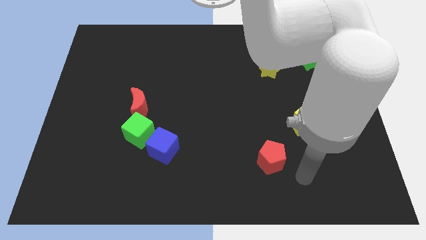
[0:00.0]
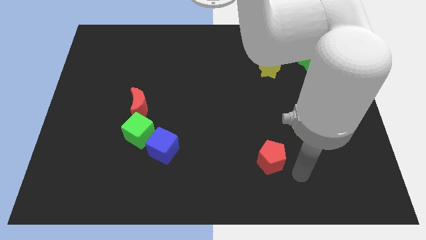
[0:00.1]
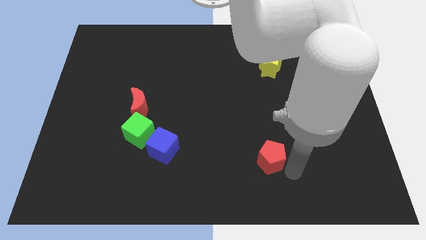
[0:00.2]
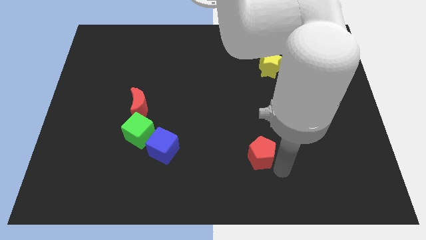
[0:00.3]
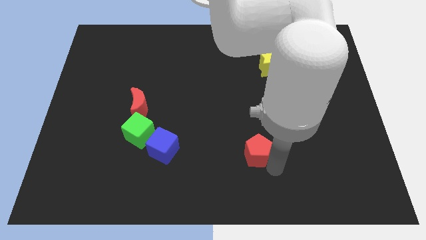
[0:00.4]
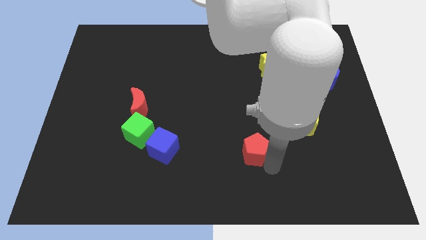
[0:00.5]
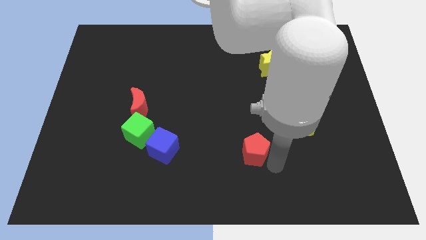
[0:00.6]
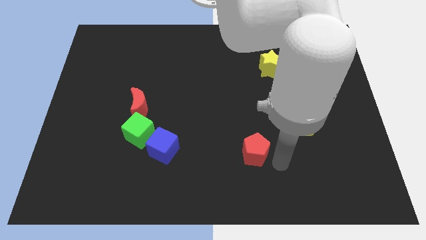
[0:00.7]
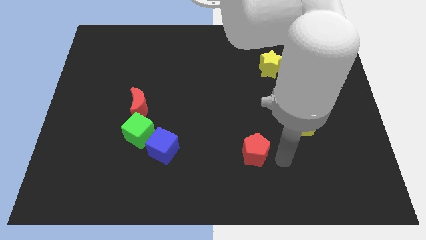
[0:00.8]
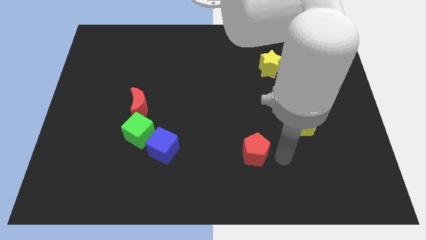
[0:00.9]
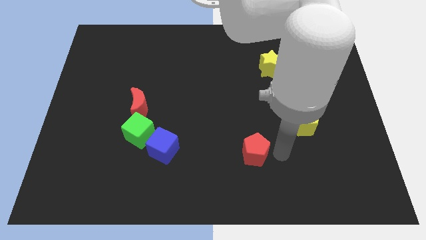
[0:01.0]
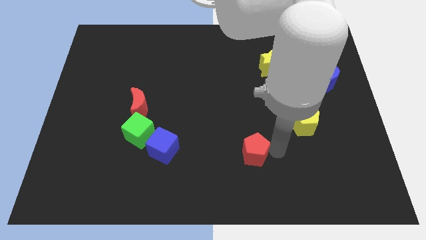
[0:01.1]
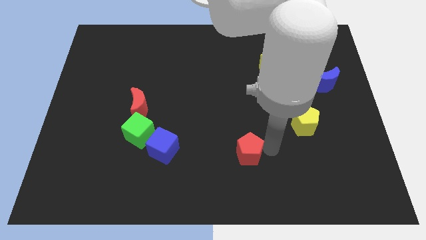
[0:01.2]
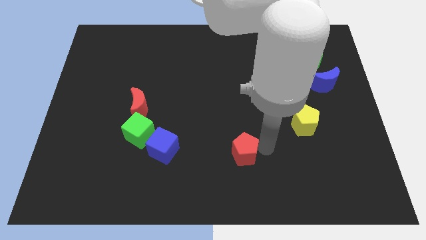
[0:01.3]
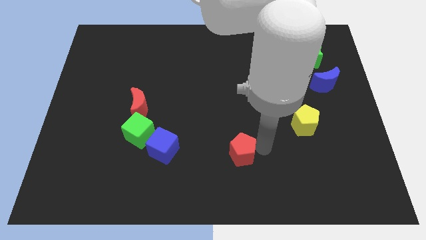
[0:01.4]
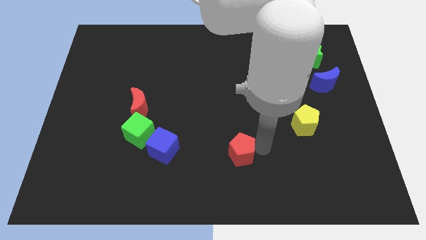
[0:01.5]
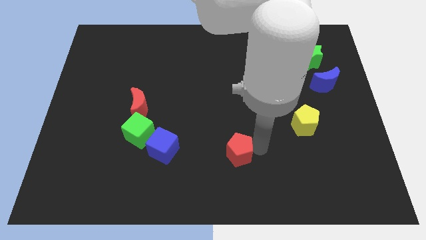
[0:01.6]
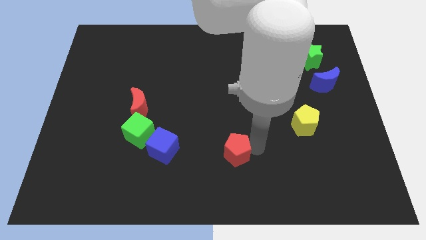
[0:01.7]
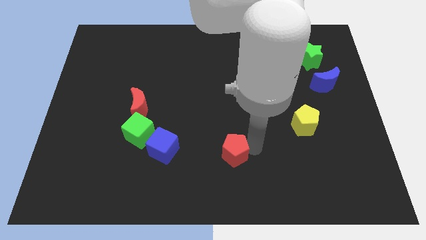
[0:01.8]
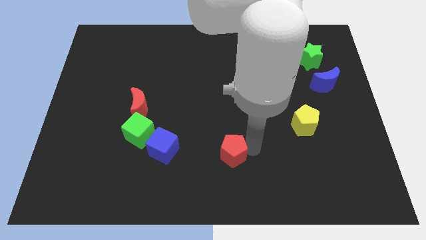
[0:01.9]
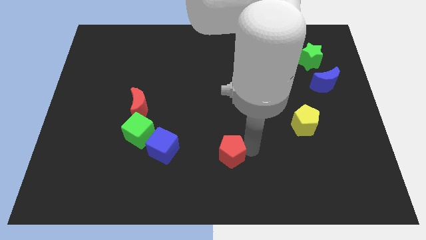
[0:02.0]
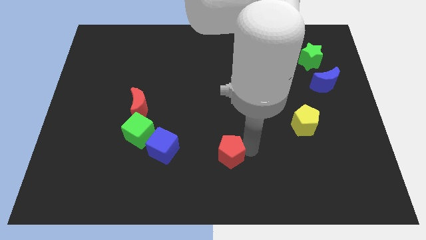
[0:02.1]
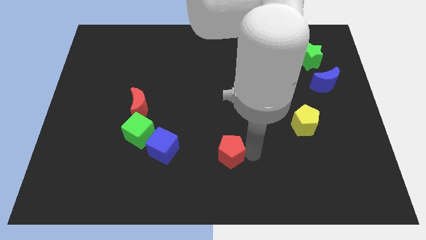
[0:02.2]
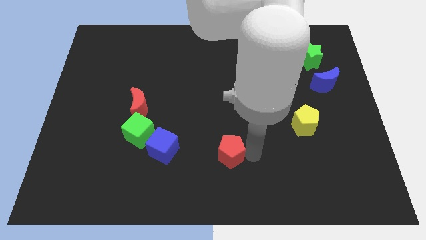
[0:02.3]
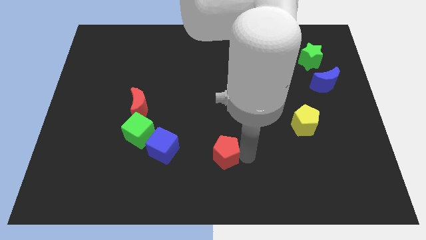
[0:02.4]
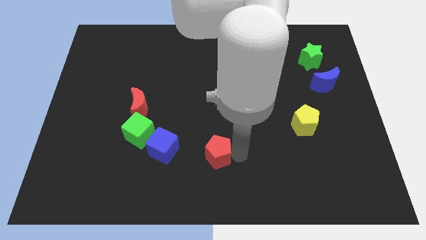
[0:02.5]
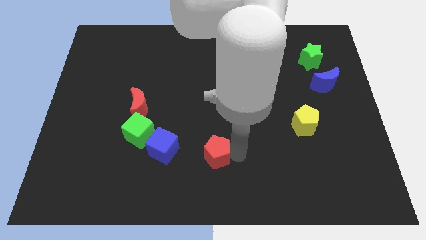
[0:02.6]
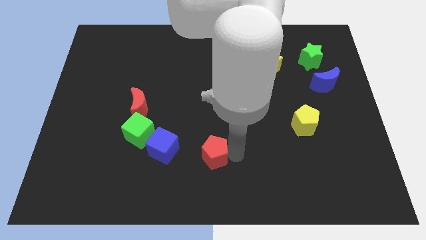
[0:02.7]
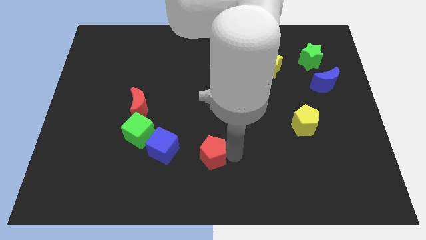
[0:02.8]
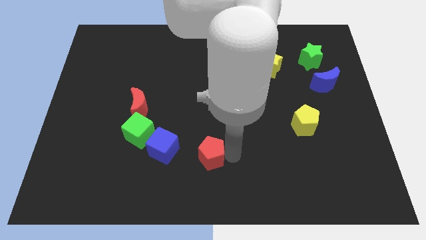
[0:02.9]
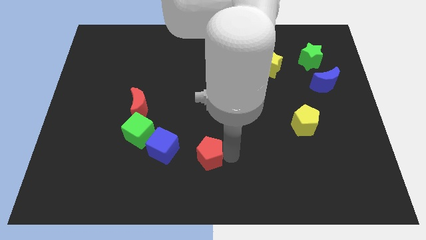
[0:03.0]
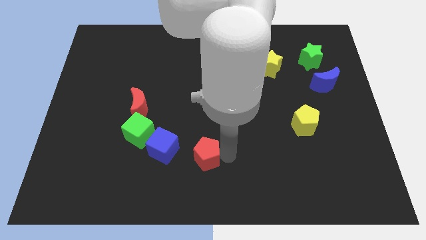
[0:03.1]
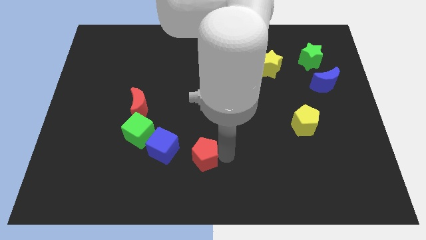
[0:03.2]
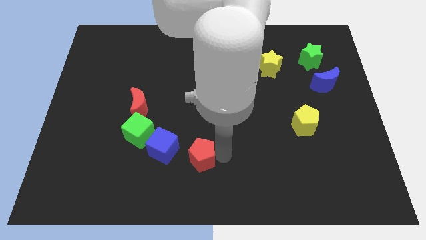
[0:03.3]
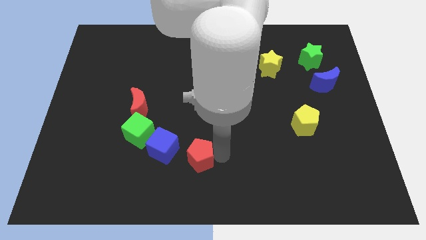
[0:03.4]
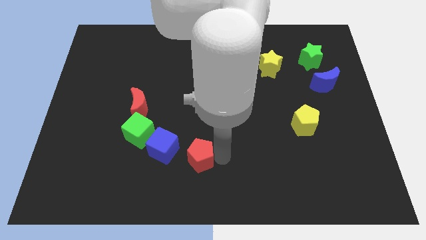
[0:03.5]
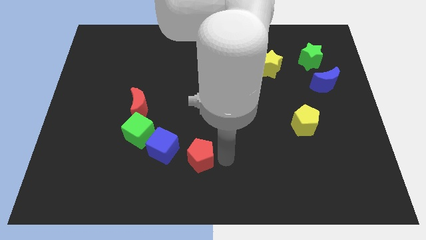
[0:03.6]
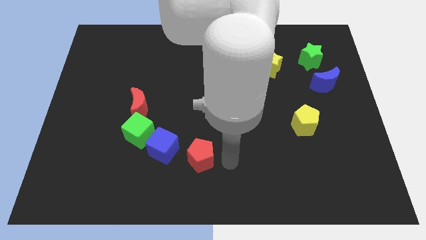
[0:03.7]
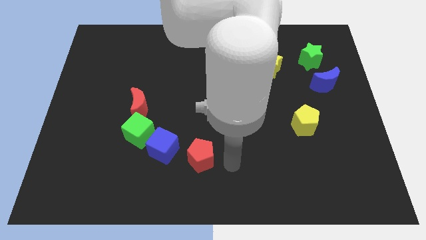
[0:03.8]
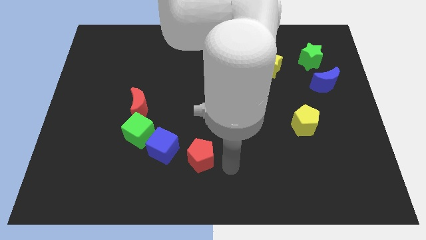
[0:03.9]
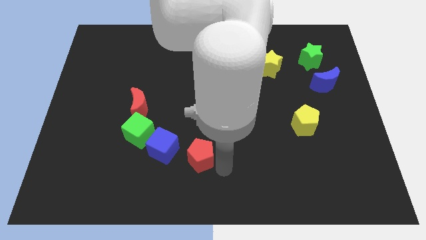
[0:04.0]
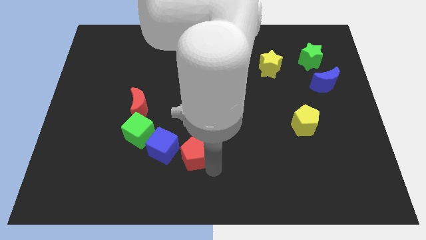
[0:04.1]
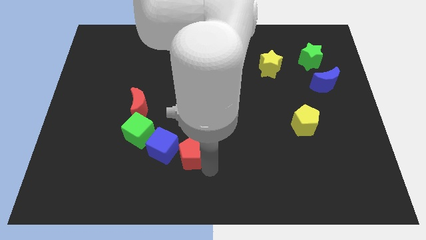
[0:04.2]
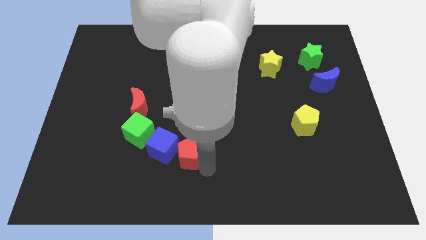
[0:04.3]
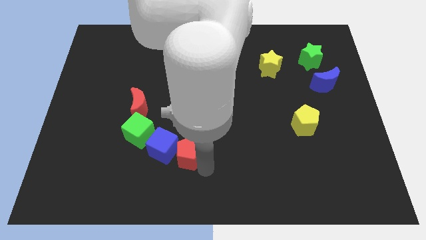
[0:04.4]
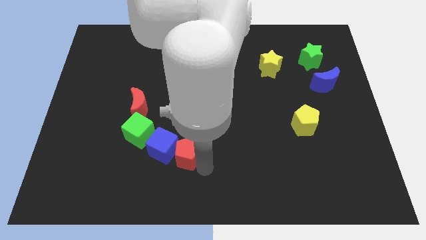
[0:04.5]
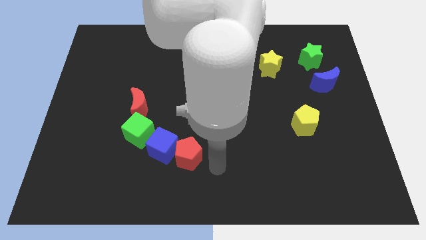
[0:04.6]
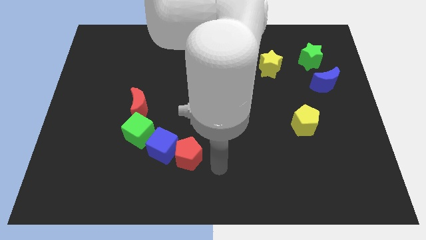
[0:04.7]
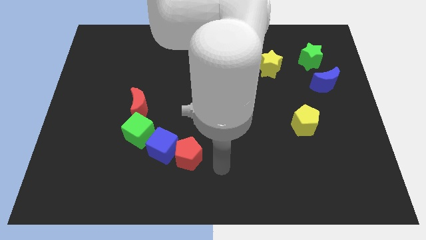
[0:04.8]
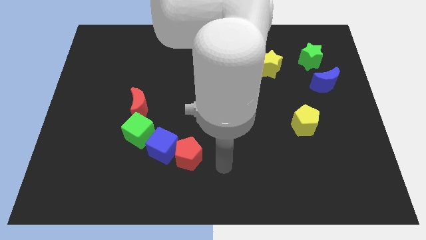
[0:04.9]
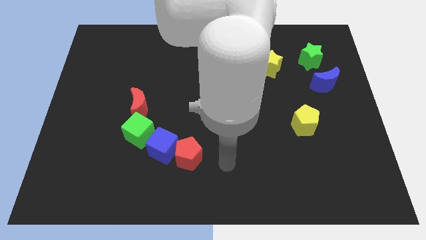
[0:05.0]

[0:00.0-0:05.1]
push red pentagon into blue cube

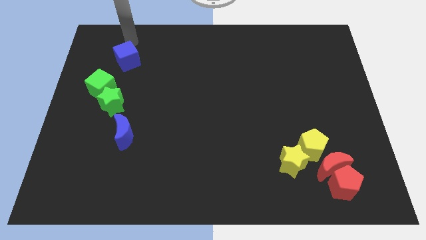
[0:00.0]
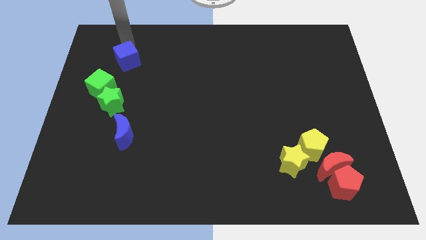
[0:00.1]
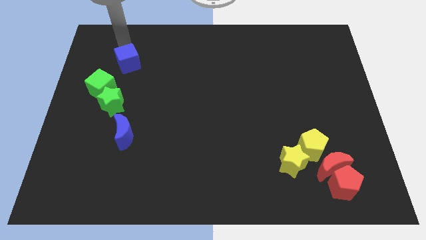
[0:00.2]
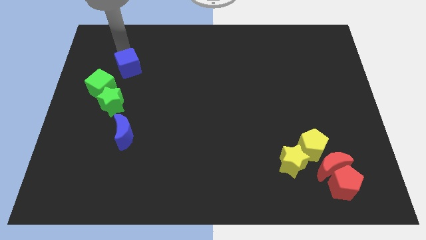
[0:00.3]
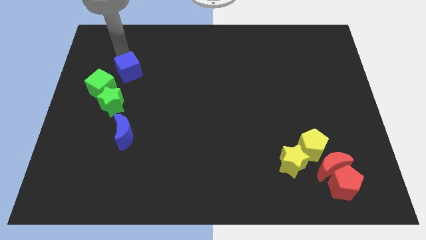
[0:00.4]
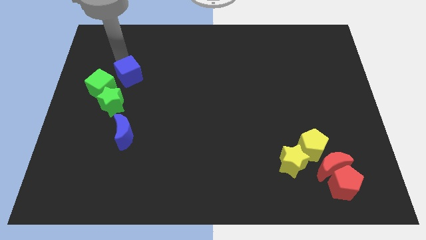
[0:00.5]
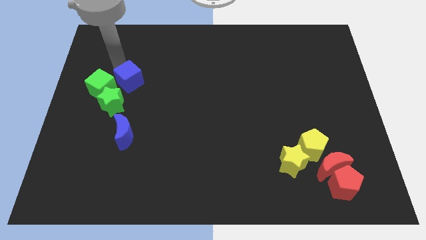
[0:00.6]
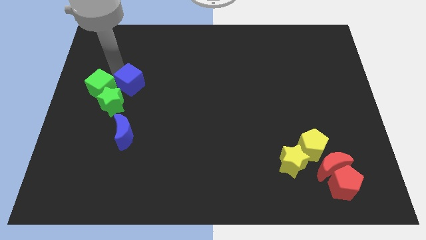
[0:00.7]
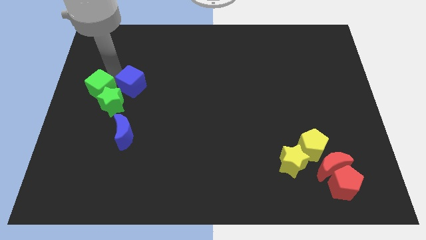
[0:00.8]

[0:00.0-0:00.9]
push the blue cube into the green cube

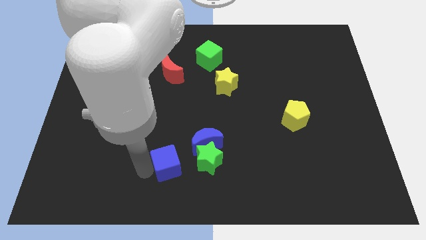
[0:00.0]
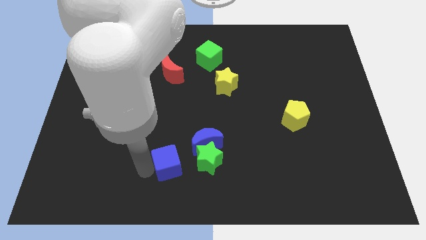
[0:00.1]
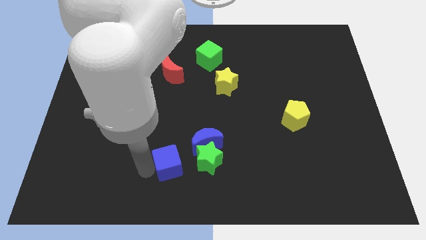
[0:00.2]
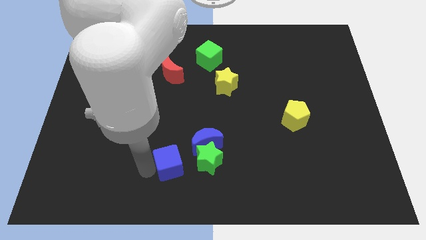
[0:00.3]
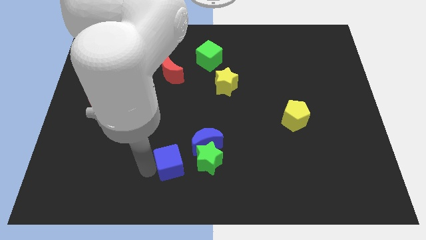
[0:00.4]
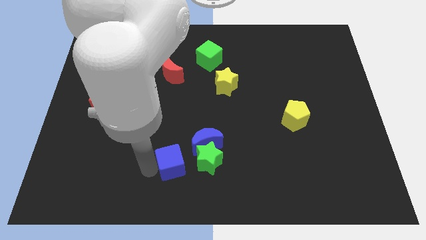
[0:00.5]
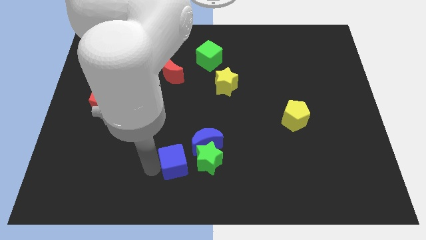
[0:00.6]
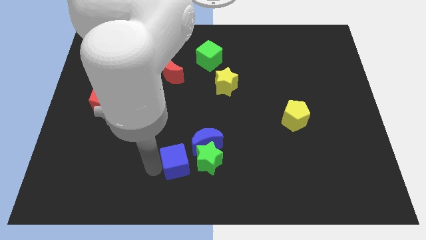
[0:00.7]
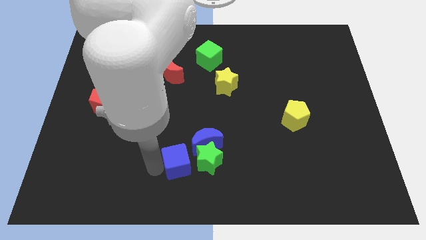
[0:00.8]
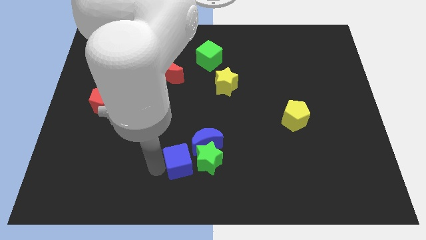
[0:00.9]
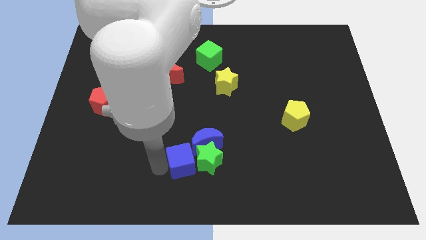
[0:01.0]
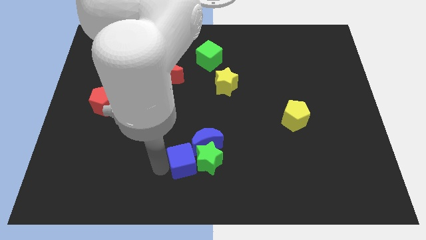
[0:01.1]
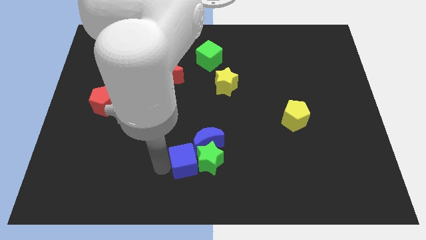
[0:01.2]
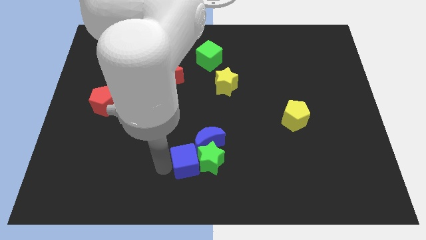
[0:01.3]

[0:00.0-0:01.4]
move the blue cube into the left side of the green star

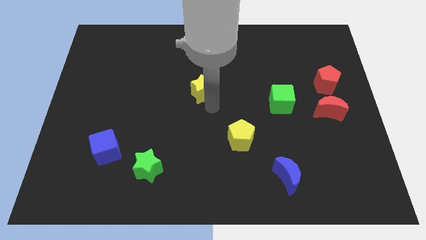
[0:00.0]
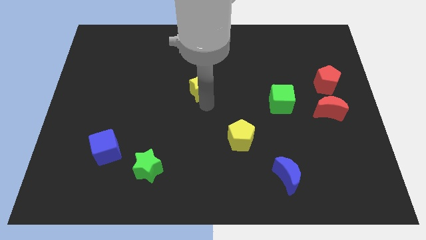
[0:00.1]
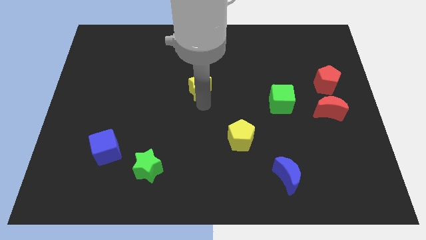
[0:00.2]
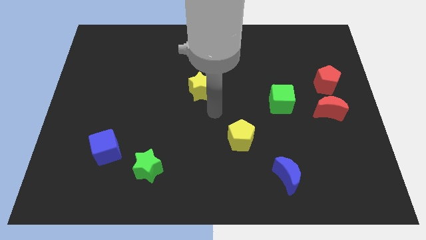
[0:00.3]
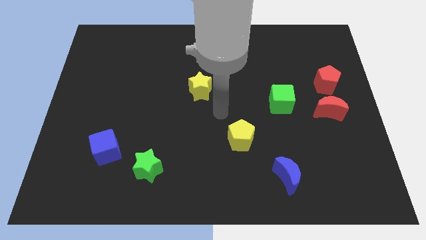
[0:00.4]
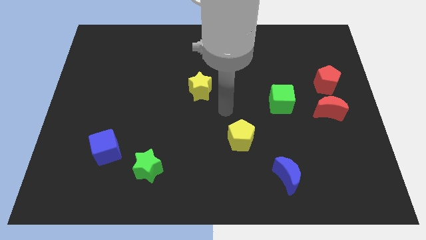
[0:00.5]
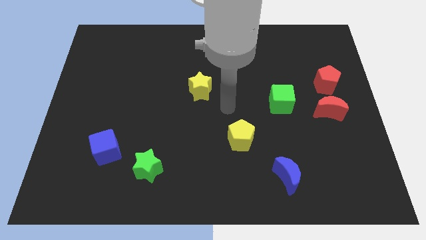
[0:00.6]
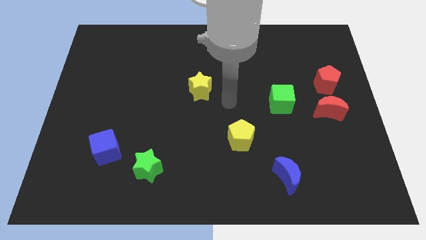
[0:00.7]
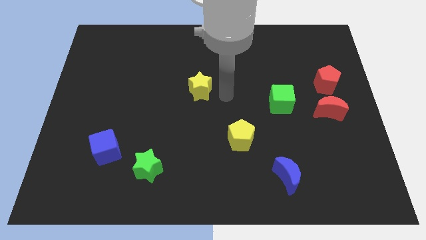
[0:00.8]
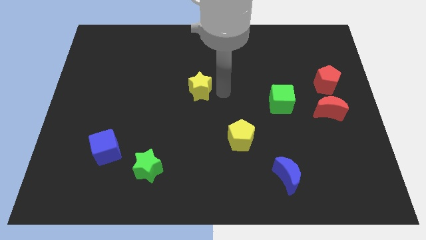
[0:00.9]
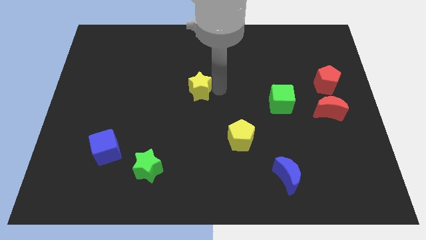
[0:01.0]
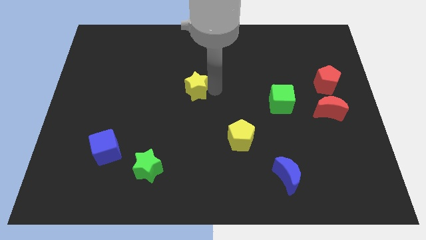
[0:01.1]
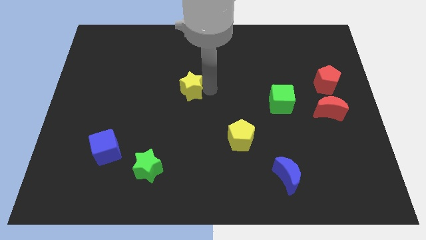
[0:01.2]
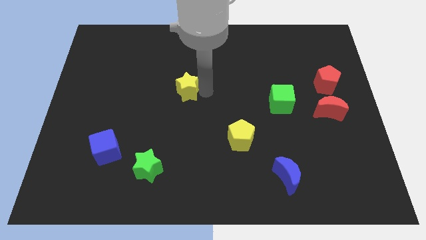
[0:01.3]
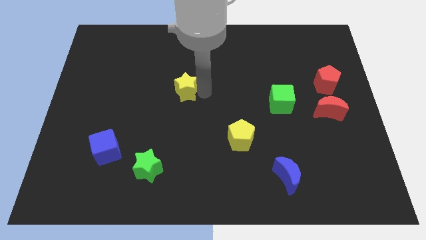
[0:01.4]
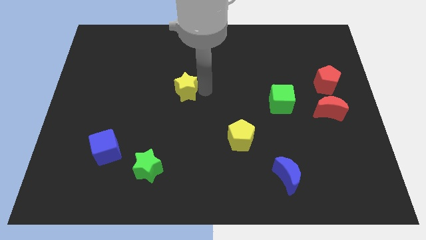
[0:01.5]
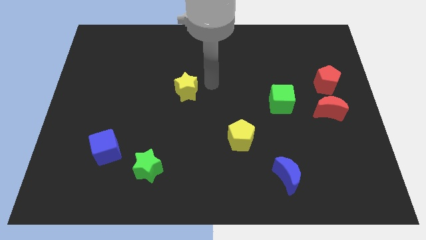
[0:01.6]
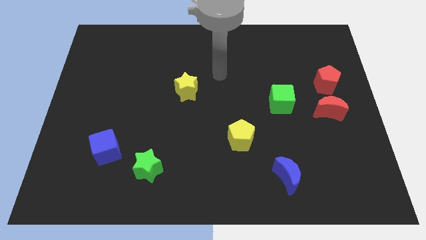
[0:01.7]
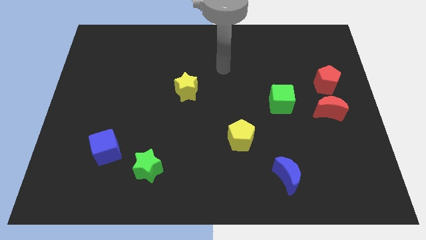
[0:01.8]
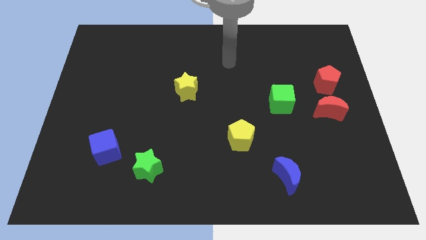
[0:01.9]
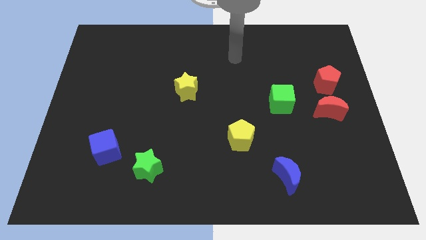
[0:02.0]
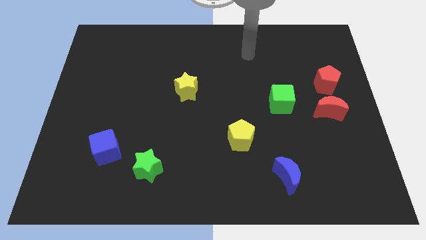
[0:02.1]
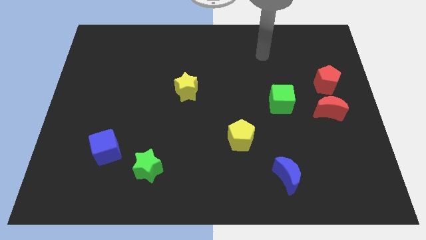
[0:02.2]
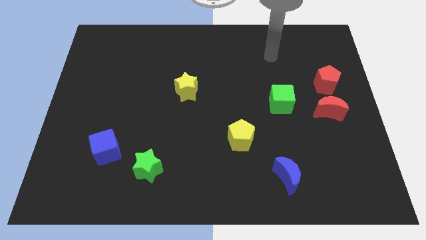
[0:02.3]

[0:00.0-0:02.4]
slightly move the yellow star left to the board
